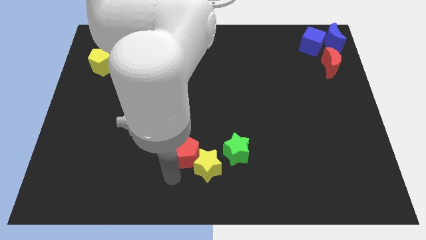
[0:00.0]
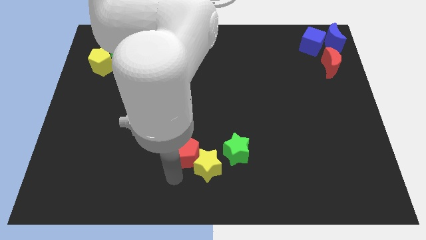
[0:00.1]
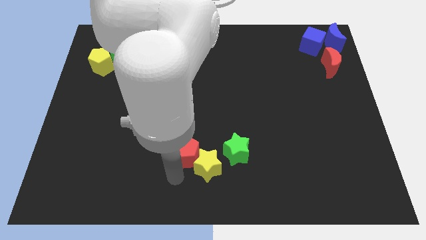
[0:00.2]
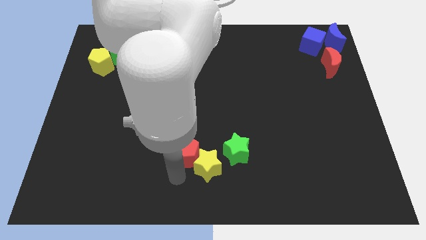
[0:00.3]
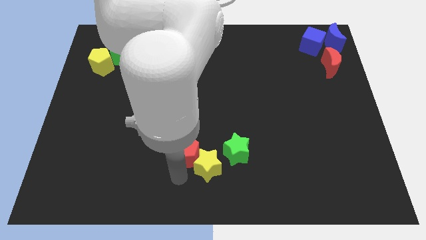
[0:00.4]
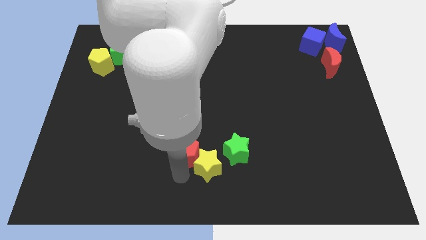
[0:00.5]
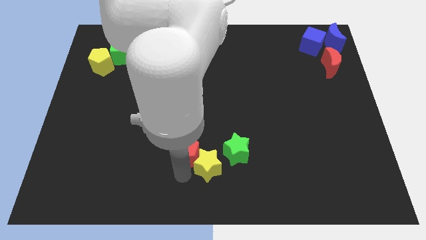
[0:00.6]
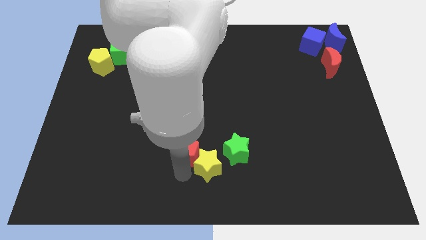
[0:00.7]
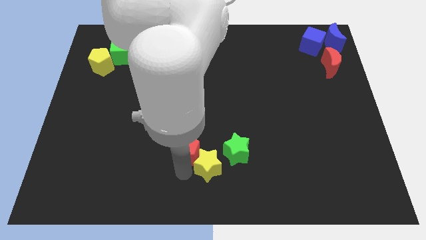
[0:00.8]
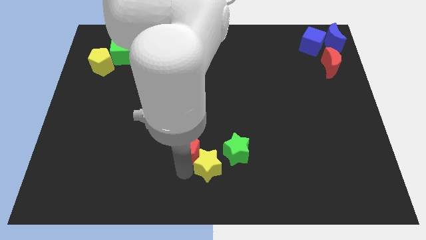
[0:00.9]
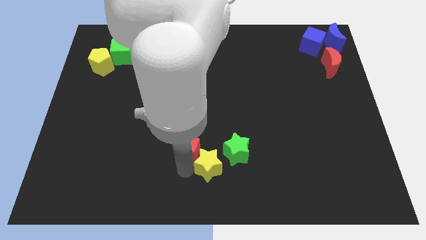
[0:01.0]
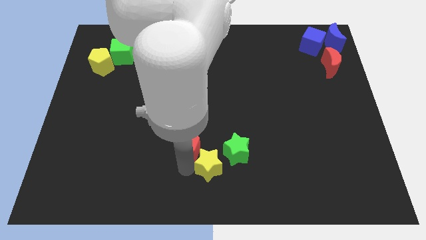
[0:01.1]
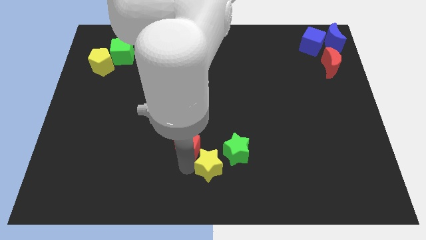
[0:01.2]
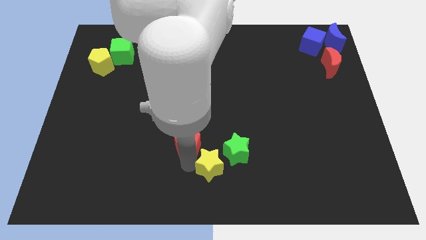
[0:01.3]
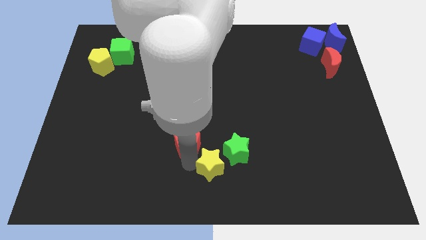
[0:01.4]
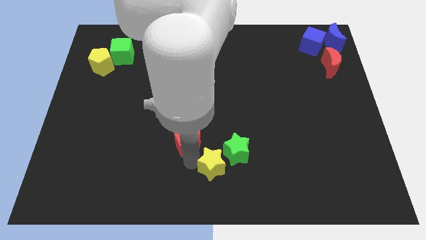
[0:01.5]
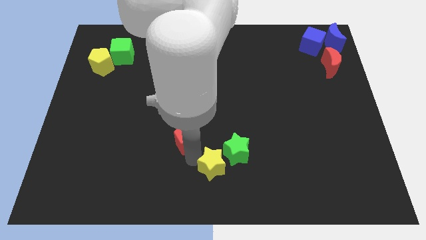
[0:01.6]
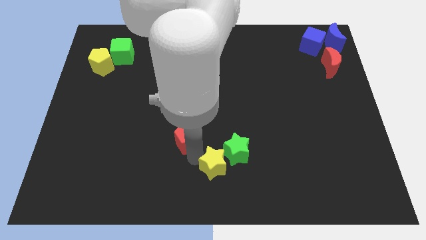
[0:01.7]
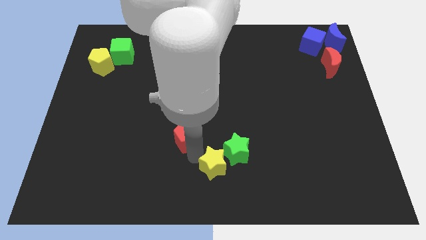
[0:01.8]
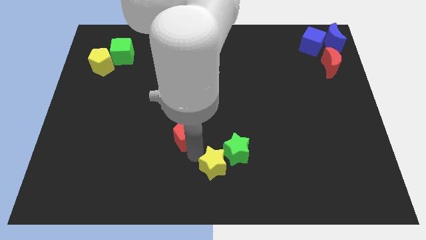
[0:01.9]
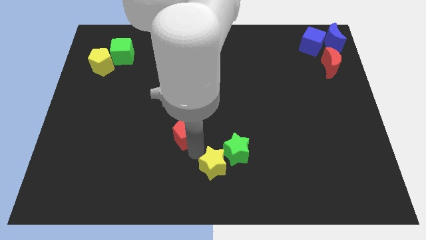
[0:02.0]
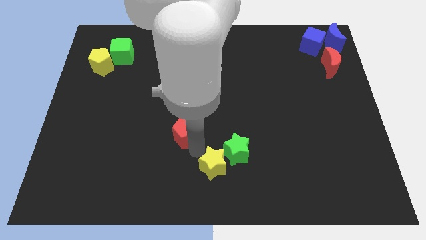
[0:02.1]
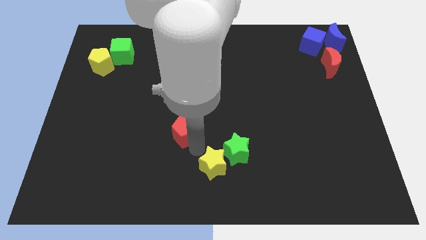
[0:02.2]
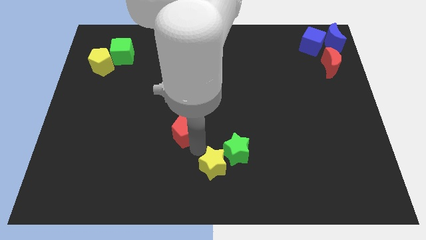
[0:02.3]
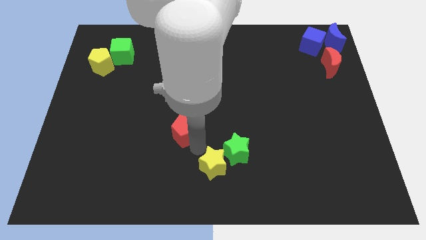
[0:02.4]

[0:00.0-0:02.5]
separate the red pentagon from yellow star

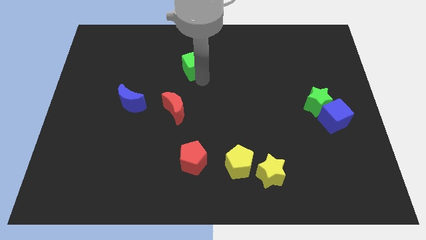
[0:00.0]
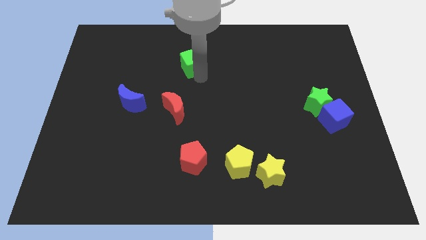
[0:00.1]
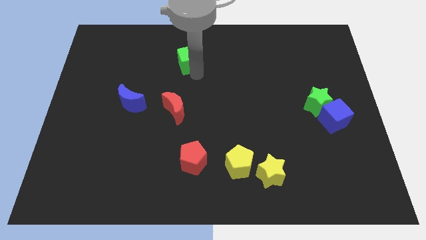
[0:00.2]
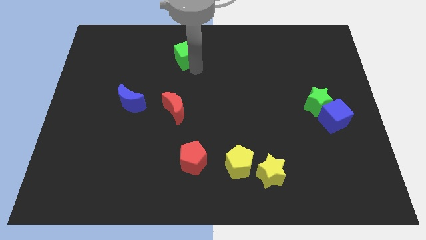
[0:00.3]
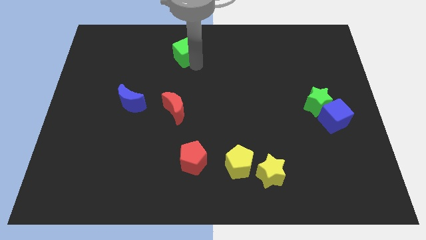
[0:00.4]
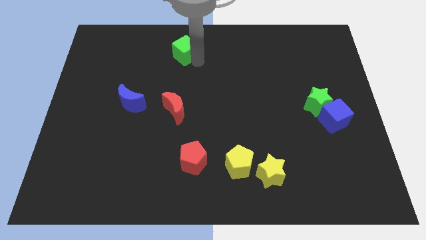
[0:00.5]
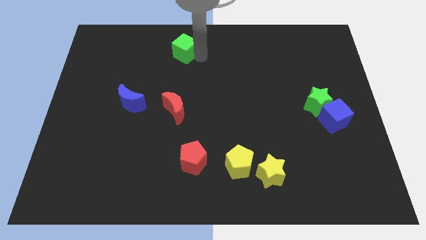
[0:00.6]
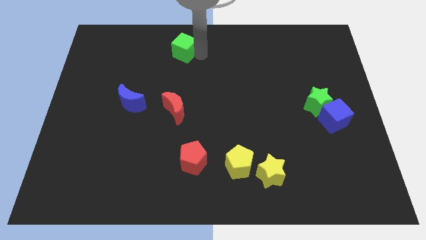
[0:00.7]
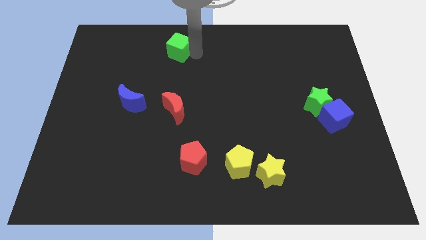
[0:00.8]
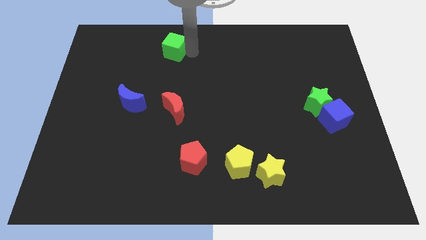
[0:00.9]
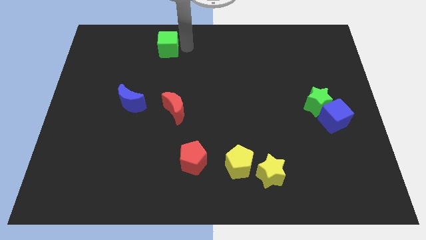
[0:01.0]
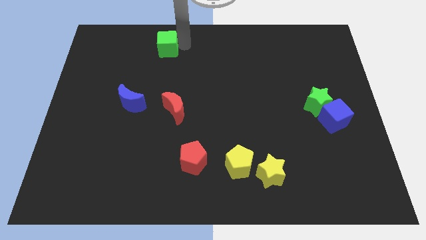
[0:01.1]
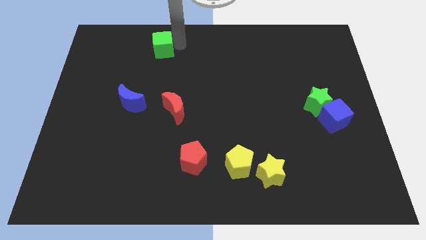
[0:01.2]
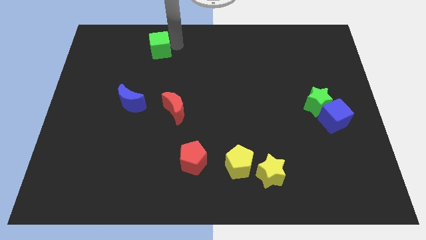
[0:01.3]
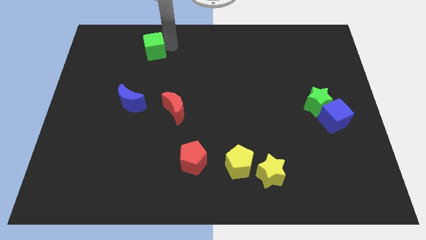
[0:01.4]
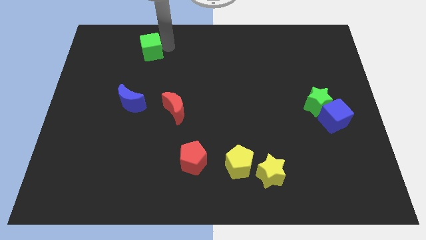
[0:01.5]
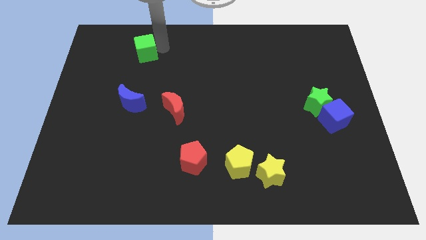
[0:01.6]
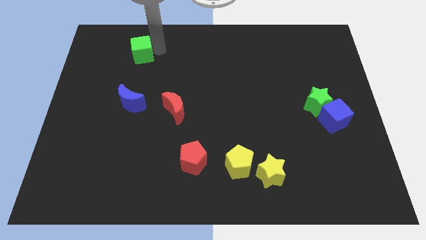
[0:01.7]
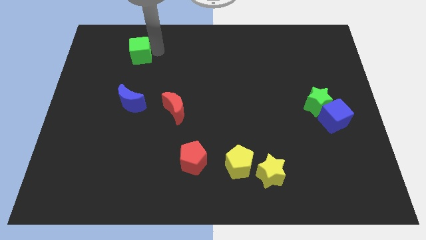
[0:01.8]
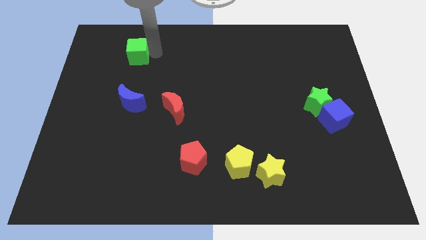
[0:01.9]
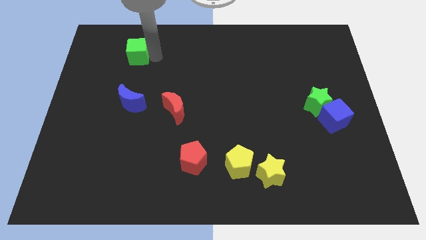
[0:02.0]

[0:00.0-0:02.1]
place the green cube vertically above the blue moon

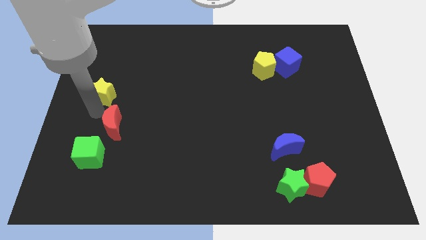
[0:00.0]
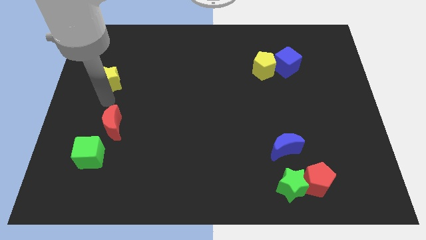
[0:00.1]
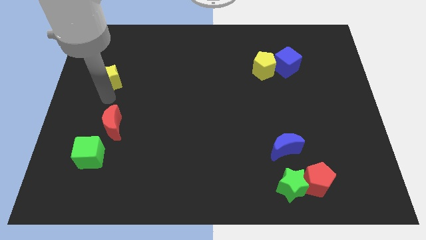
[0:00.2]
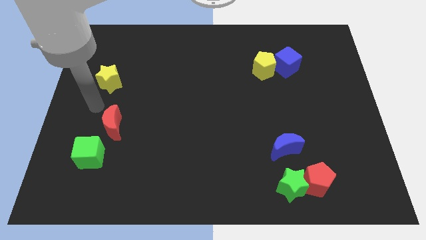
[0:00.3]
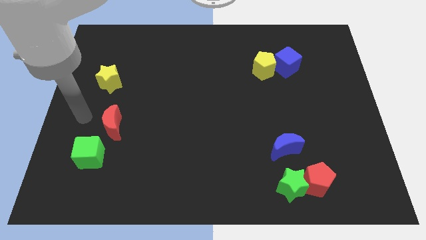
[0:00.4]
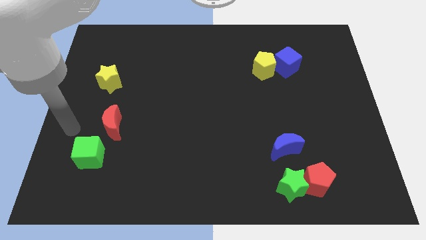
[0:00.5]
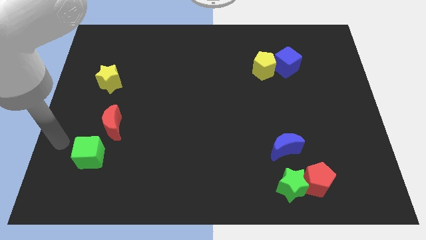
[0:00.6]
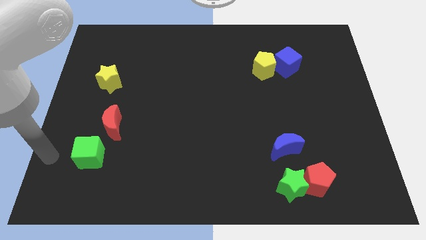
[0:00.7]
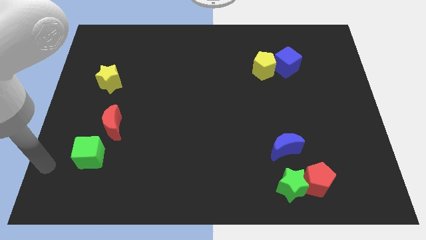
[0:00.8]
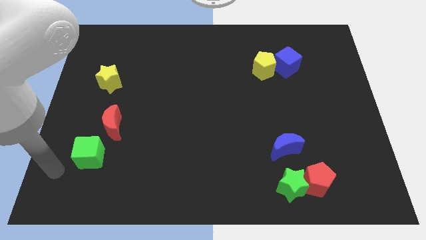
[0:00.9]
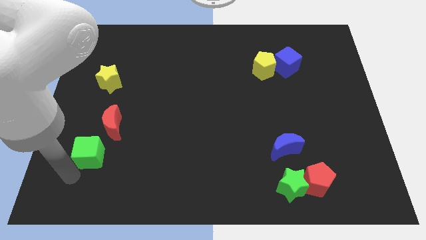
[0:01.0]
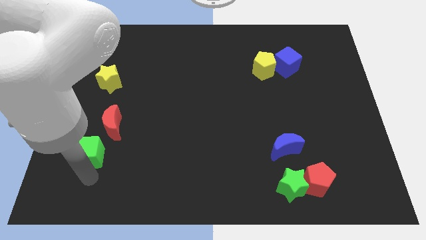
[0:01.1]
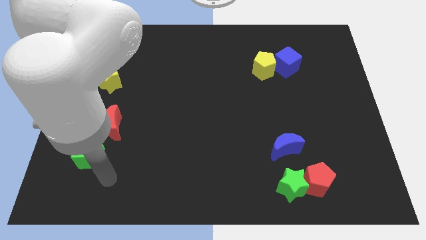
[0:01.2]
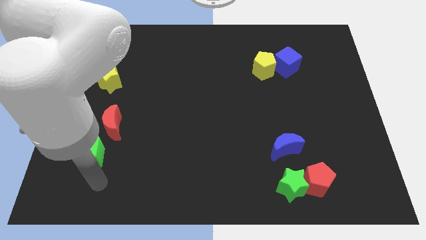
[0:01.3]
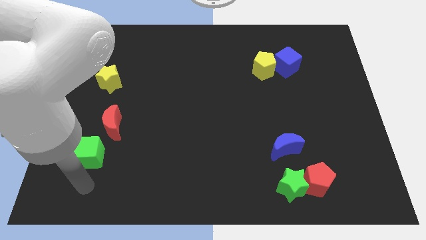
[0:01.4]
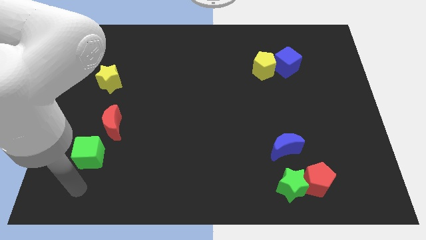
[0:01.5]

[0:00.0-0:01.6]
put your arm below the green cube

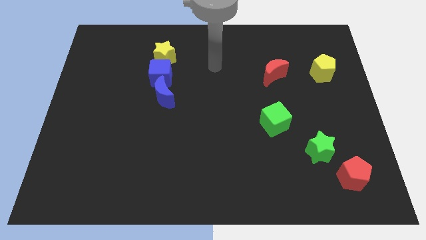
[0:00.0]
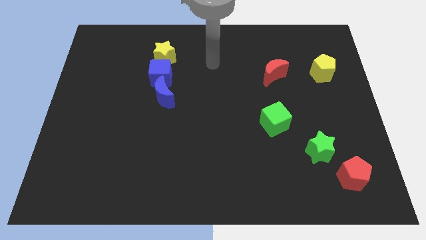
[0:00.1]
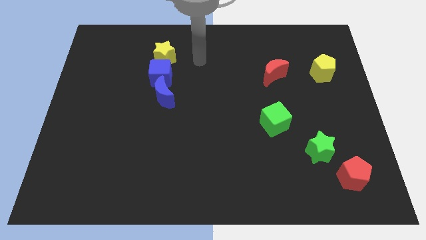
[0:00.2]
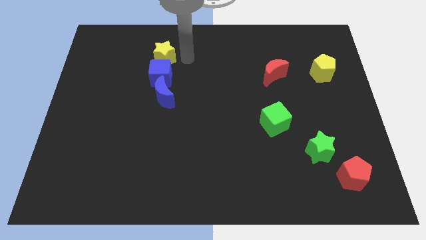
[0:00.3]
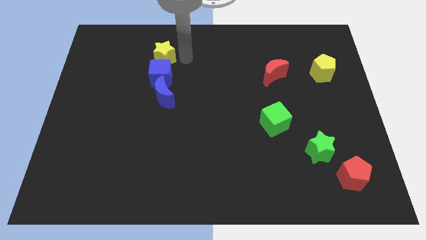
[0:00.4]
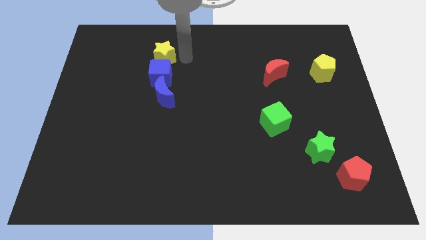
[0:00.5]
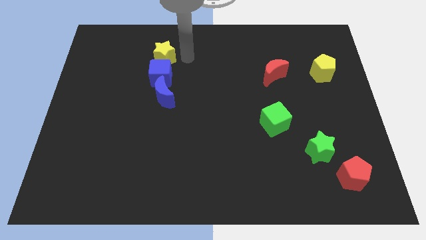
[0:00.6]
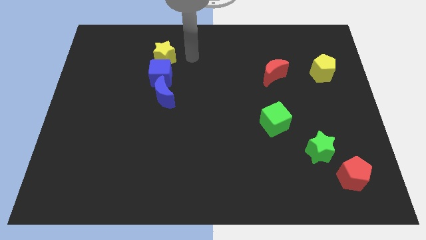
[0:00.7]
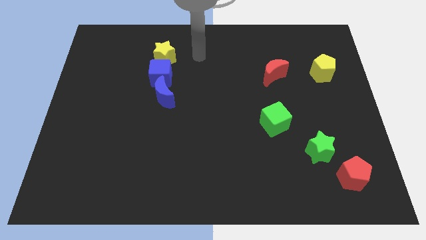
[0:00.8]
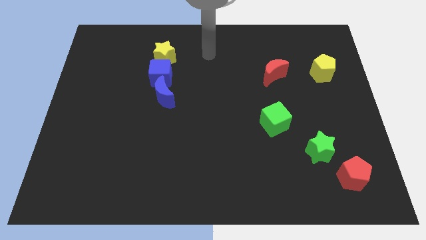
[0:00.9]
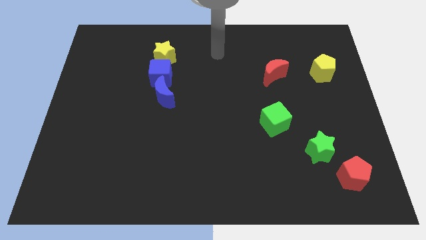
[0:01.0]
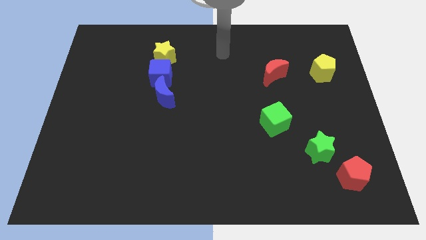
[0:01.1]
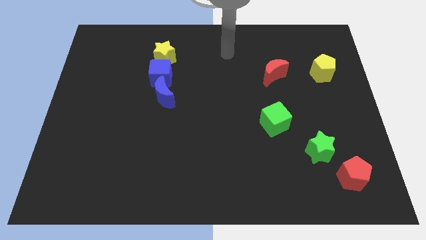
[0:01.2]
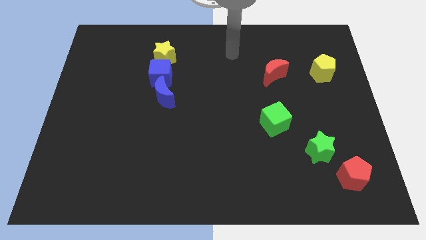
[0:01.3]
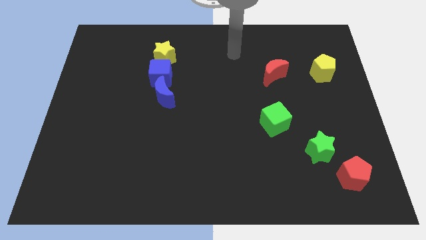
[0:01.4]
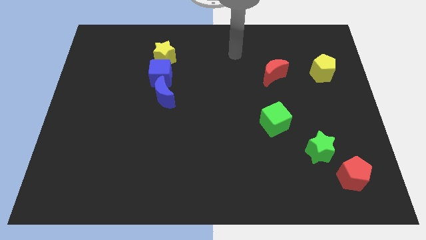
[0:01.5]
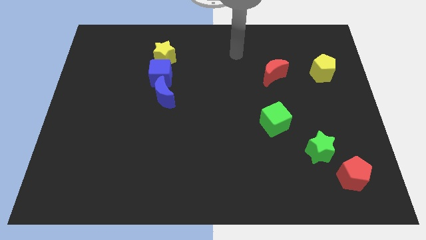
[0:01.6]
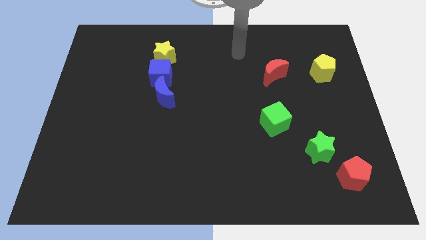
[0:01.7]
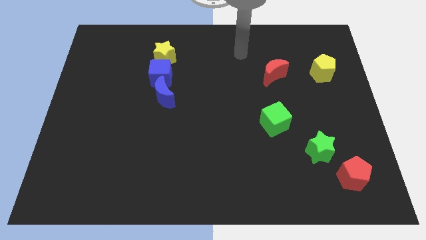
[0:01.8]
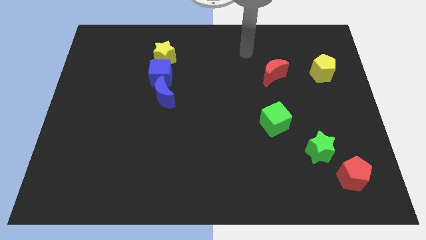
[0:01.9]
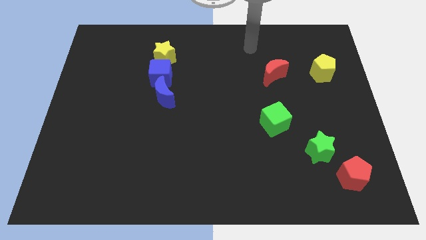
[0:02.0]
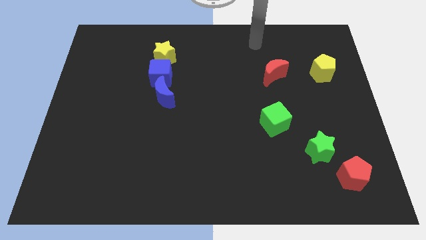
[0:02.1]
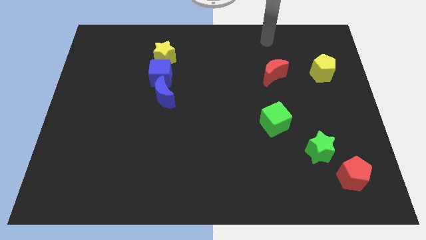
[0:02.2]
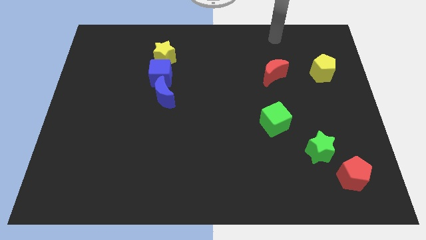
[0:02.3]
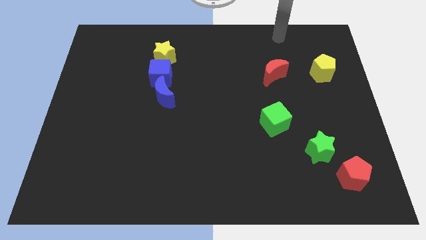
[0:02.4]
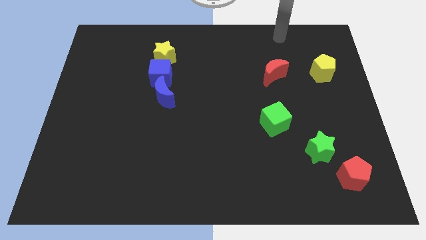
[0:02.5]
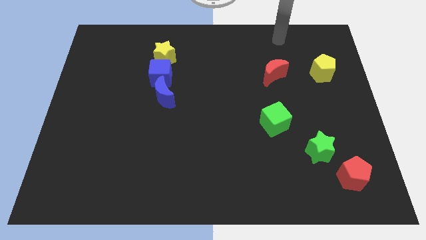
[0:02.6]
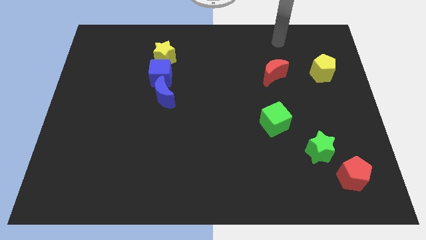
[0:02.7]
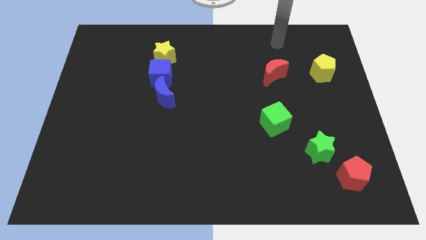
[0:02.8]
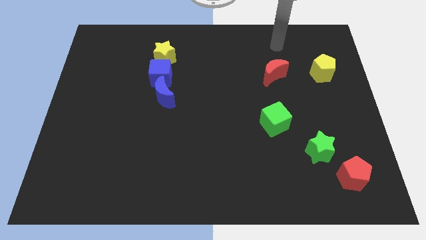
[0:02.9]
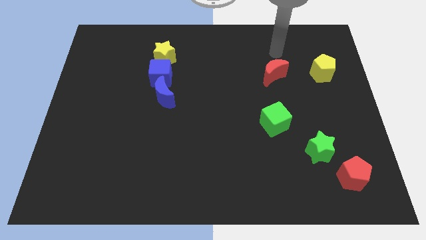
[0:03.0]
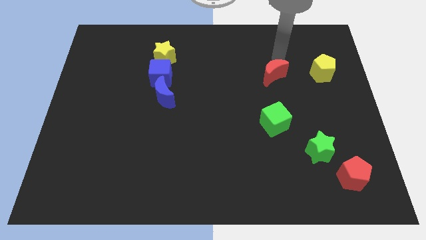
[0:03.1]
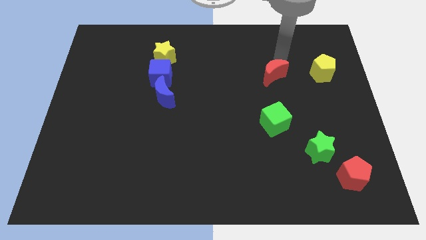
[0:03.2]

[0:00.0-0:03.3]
move your arm to the top of red crescent
